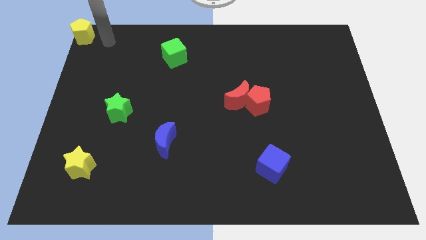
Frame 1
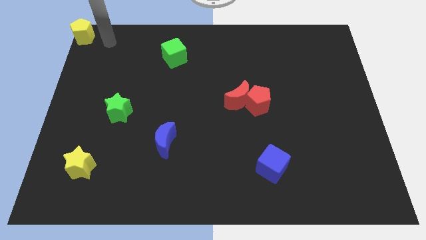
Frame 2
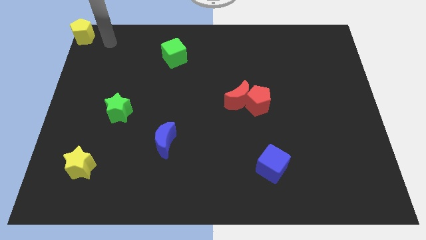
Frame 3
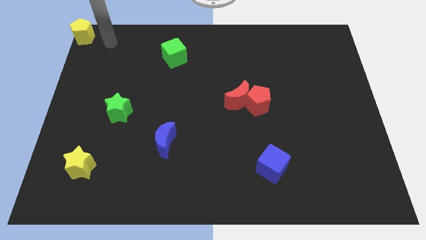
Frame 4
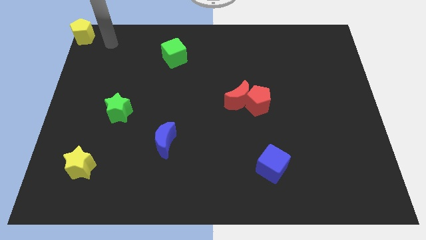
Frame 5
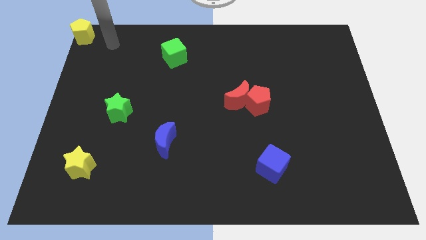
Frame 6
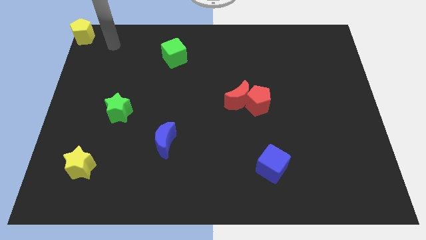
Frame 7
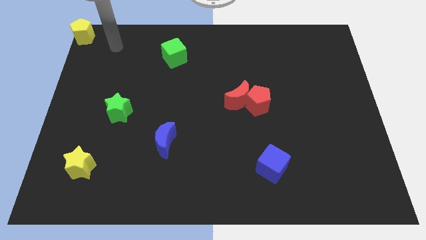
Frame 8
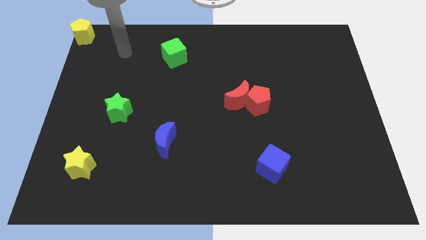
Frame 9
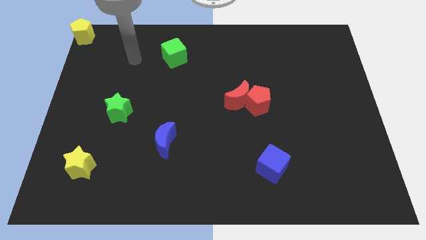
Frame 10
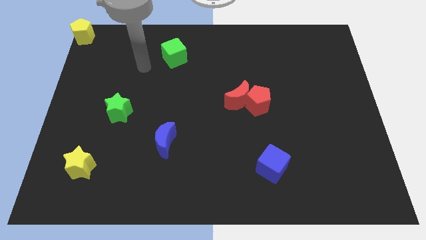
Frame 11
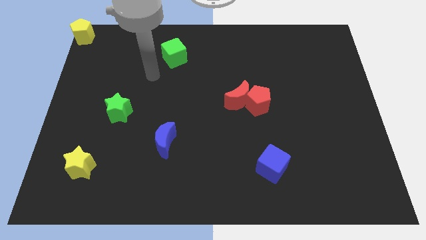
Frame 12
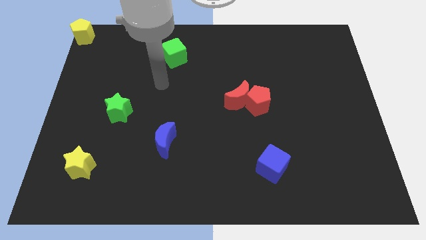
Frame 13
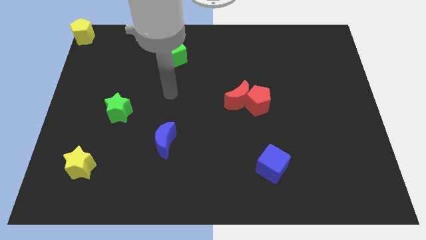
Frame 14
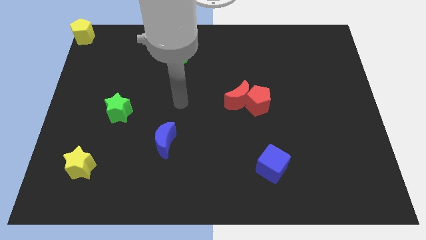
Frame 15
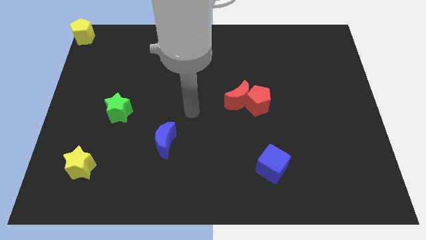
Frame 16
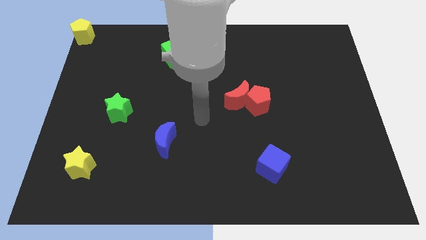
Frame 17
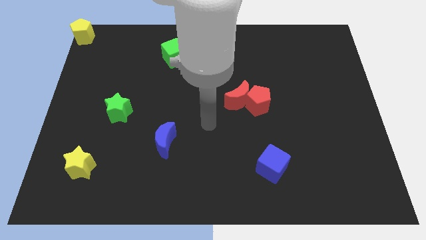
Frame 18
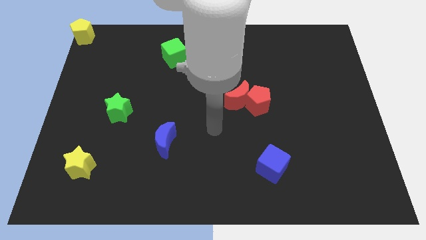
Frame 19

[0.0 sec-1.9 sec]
move the arm away from the yellow pentagon

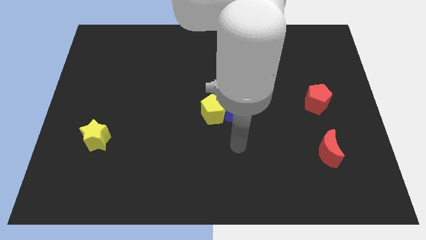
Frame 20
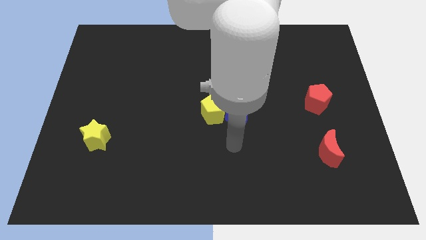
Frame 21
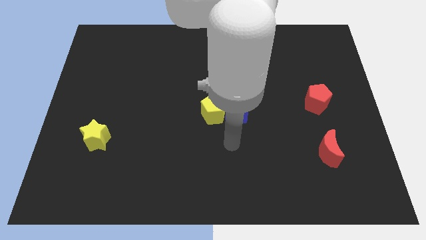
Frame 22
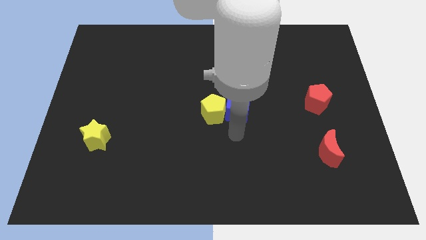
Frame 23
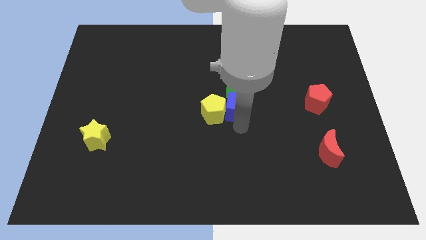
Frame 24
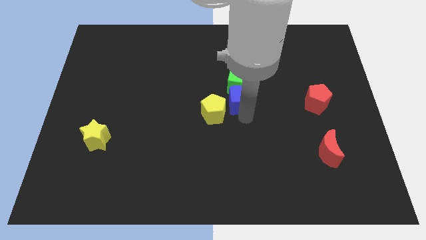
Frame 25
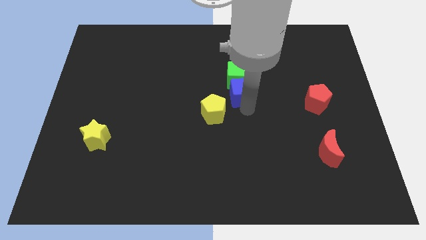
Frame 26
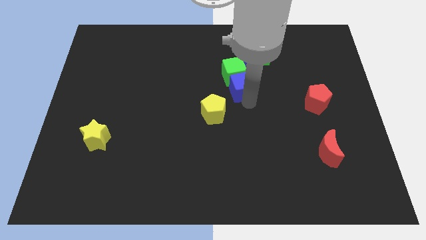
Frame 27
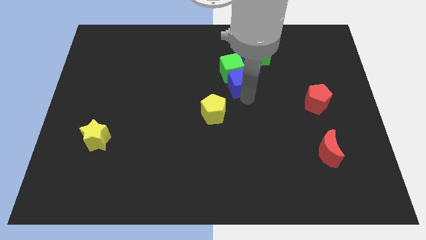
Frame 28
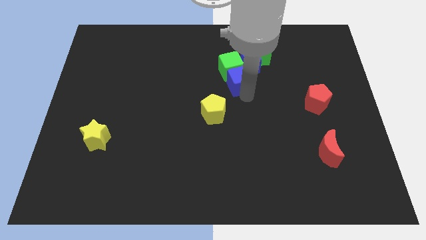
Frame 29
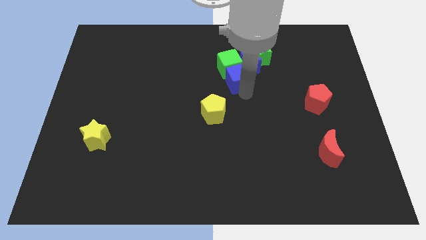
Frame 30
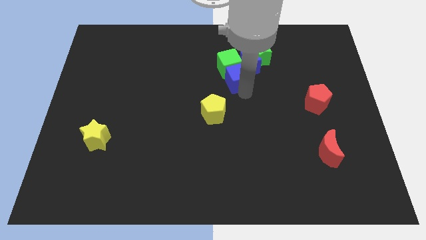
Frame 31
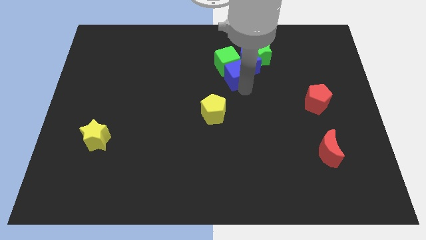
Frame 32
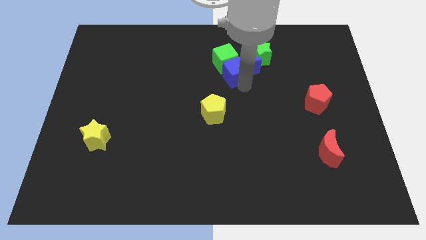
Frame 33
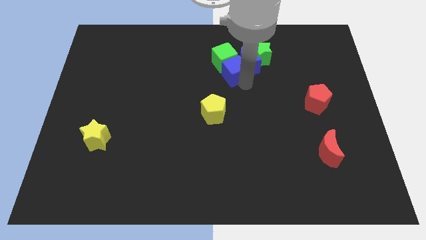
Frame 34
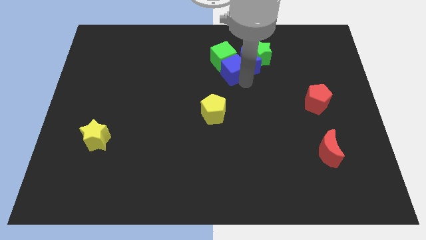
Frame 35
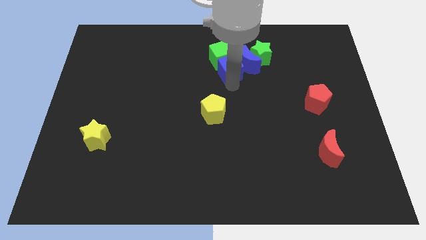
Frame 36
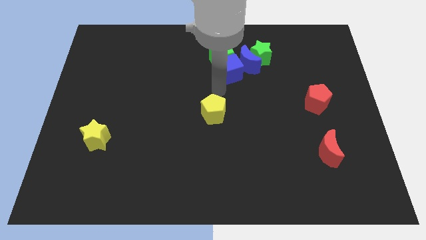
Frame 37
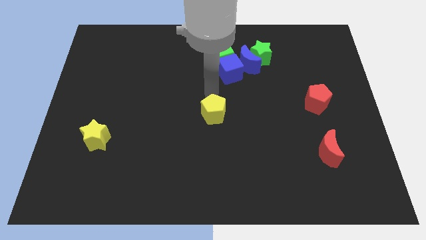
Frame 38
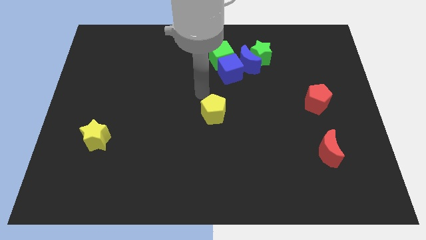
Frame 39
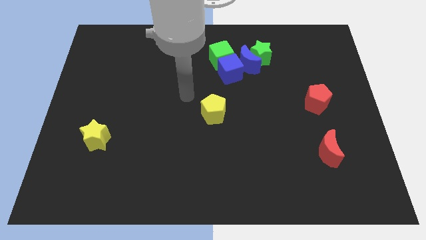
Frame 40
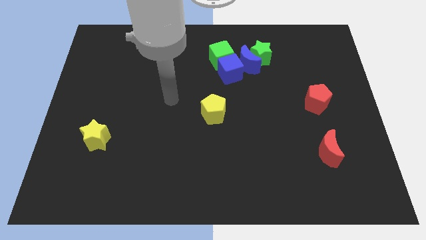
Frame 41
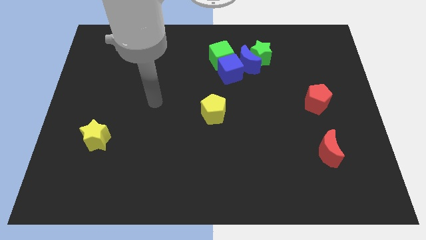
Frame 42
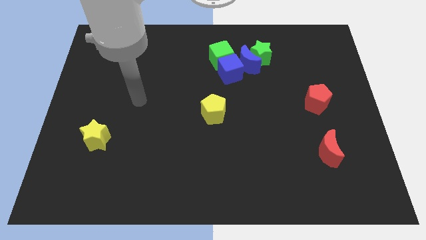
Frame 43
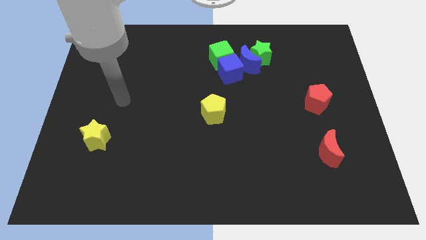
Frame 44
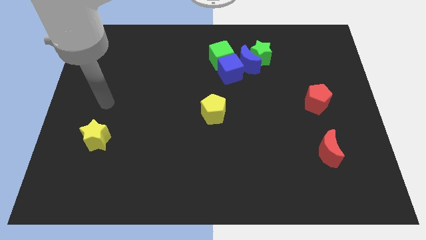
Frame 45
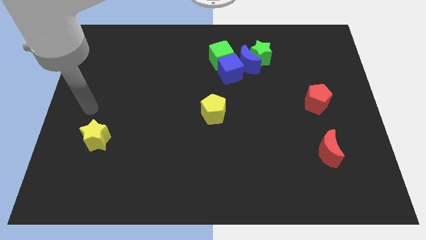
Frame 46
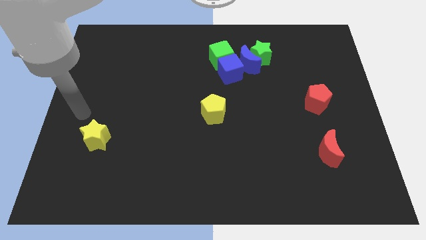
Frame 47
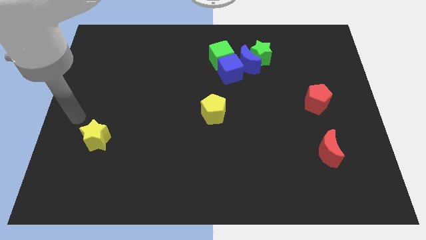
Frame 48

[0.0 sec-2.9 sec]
place the cubes to the left of the blue crescent

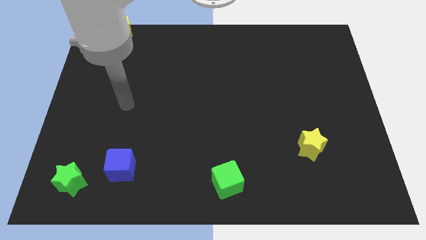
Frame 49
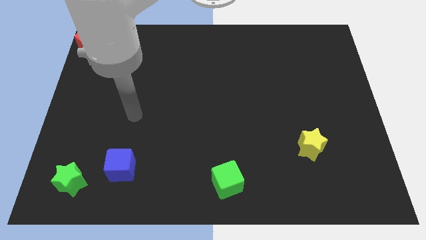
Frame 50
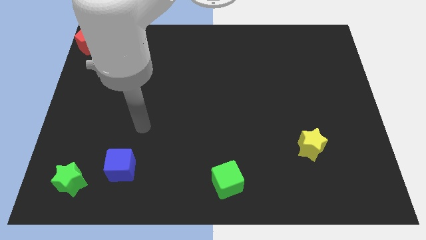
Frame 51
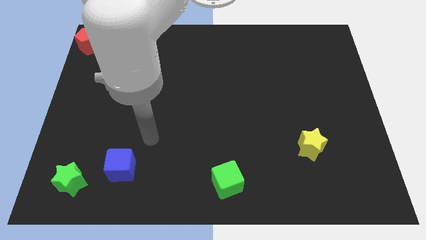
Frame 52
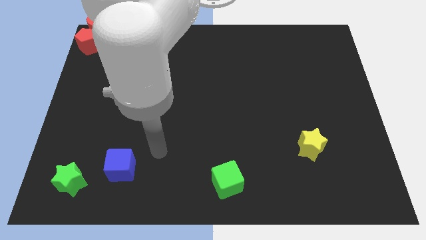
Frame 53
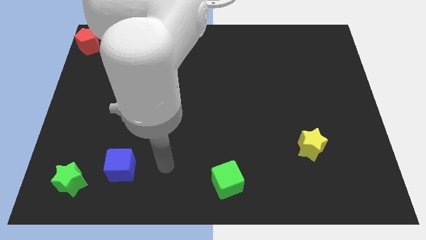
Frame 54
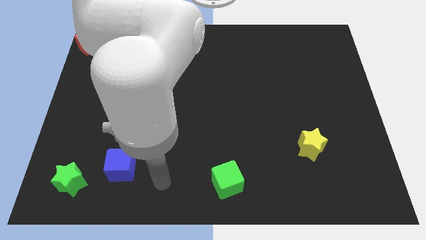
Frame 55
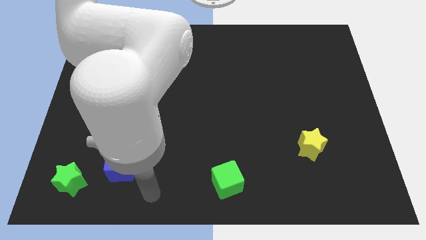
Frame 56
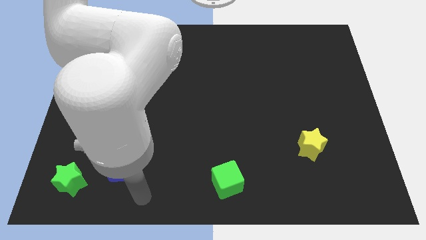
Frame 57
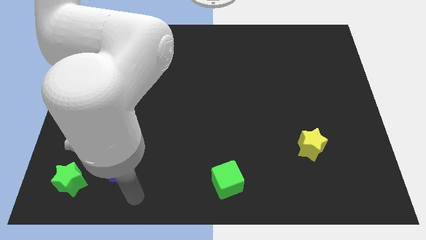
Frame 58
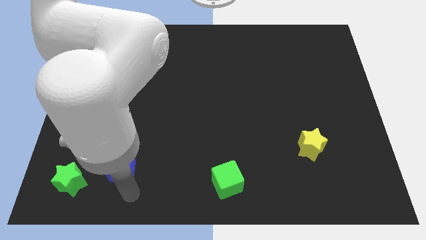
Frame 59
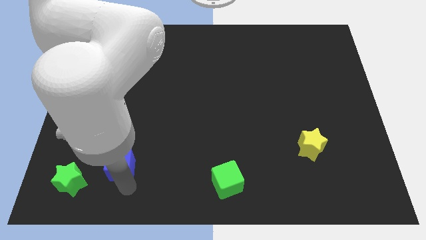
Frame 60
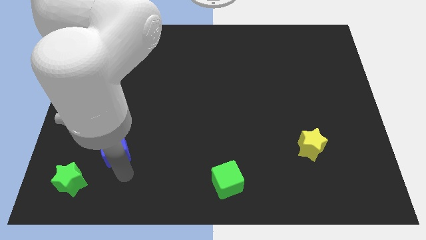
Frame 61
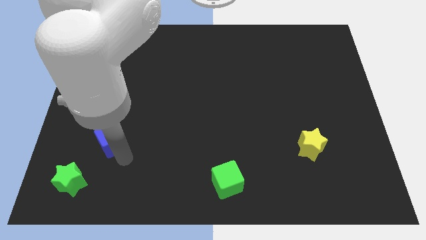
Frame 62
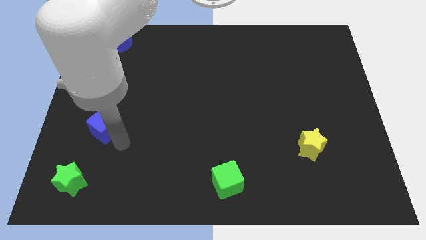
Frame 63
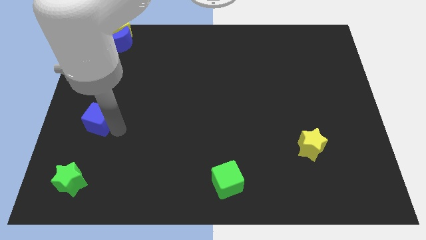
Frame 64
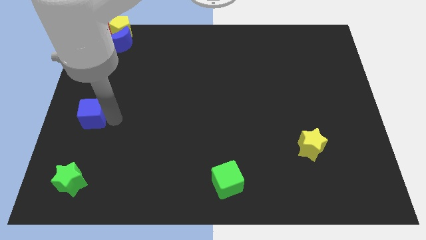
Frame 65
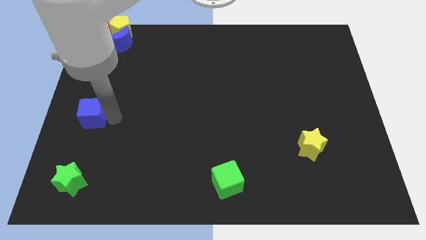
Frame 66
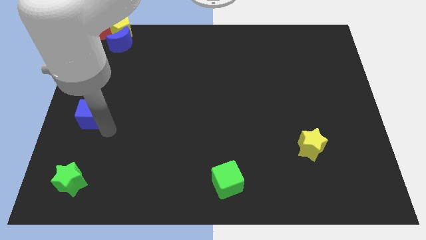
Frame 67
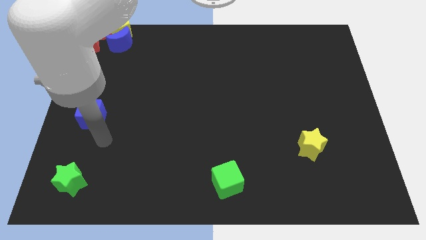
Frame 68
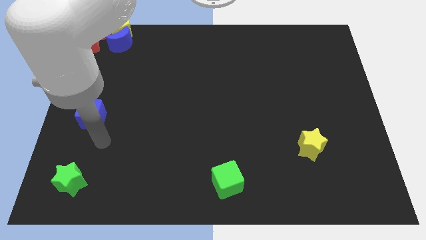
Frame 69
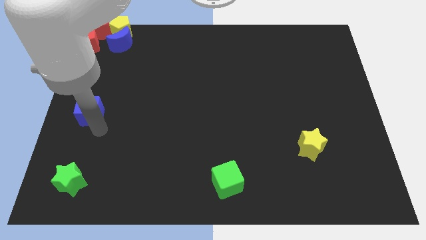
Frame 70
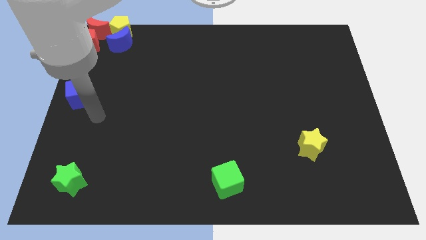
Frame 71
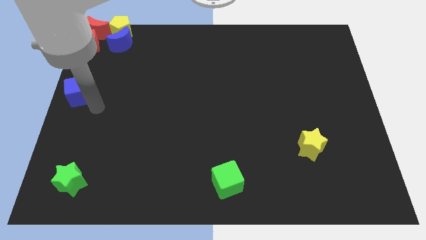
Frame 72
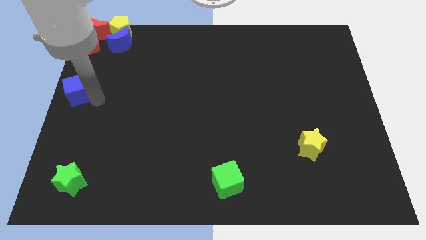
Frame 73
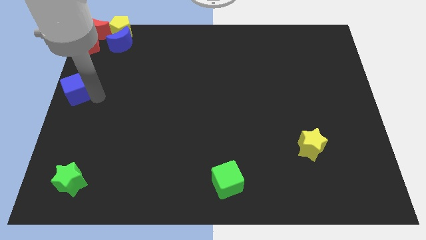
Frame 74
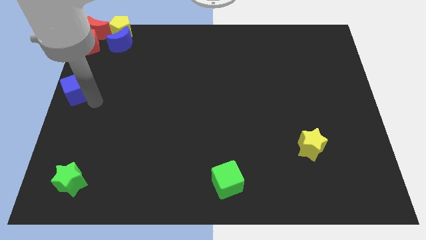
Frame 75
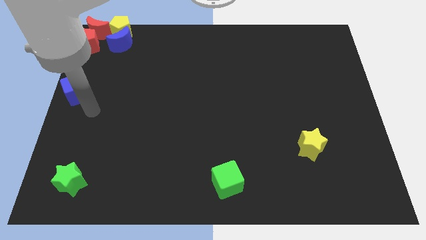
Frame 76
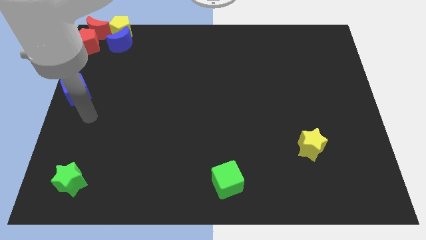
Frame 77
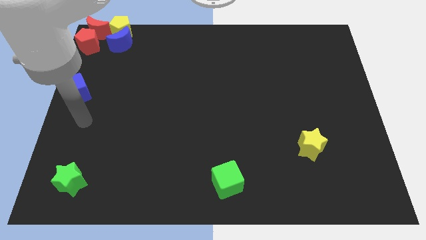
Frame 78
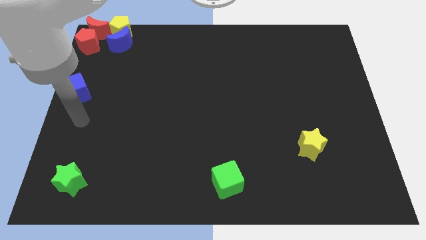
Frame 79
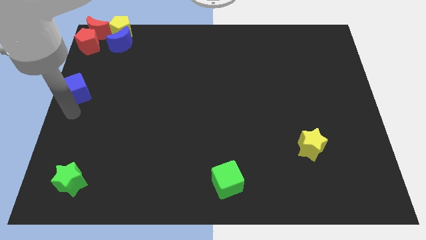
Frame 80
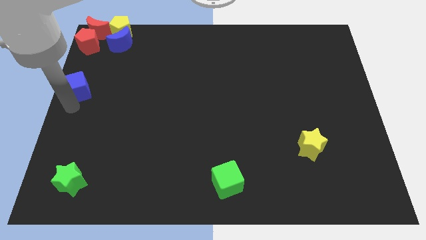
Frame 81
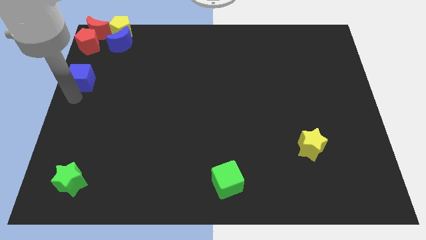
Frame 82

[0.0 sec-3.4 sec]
push the blue cube towards the group of blocks at the top left corner of the board

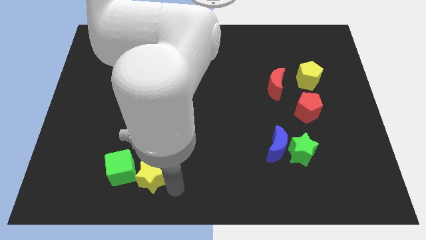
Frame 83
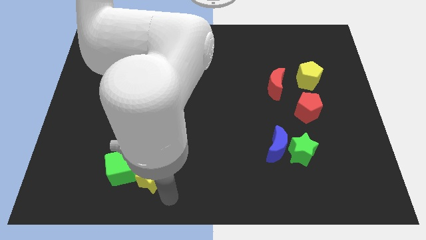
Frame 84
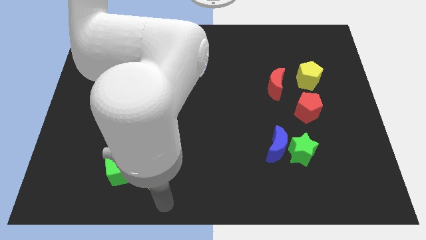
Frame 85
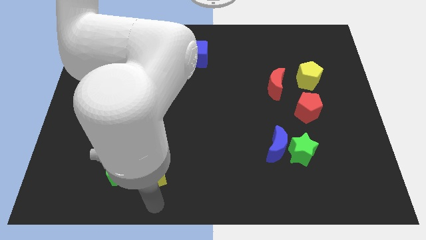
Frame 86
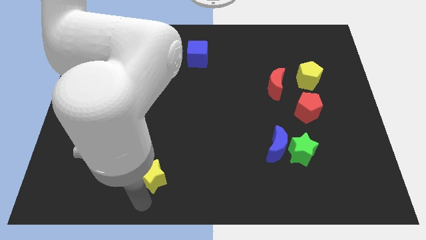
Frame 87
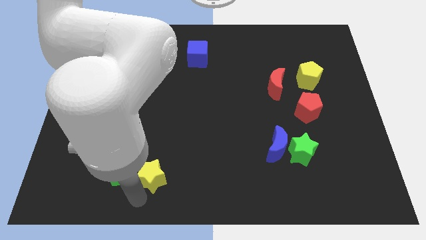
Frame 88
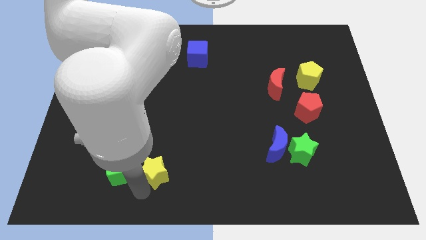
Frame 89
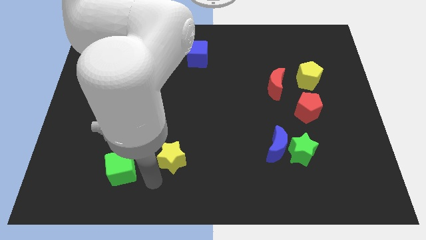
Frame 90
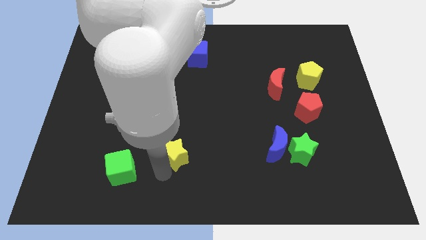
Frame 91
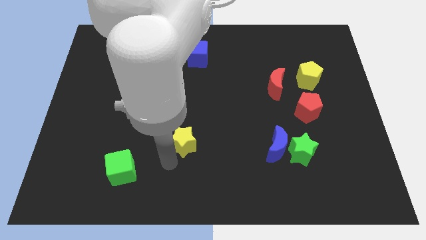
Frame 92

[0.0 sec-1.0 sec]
separate the yellow star and green cube
